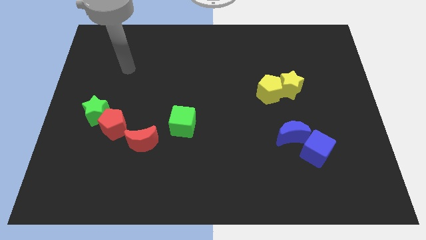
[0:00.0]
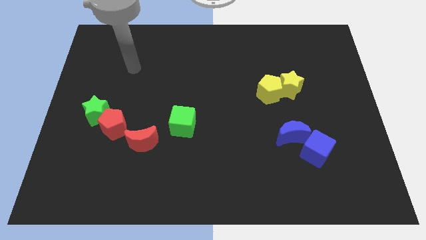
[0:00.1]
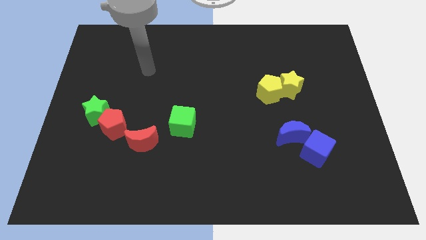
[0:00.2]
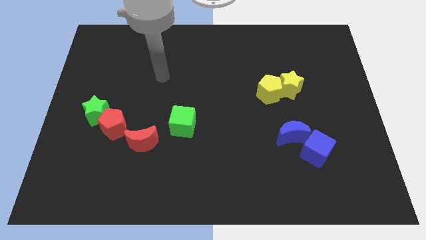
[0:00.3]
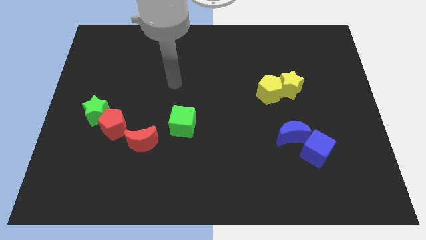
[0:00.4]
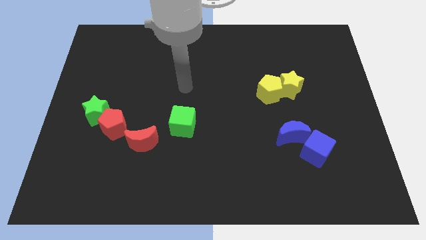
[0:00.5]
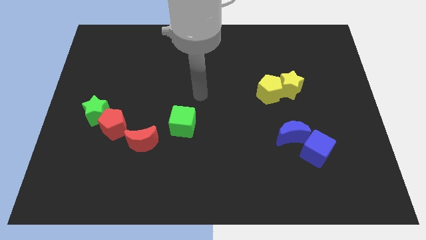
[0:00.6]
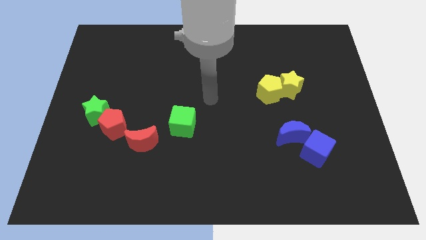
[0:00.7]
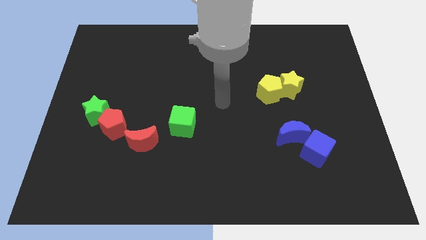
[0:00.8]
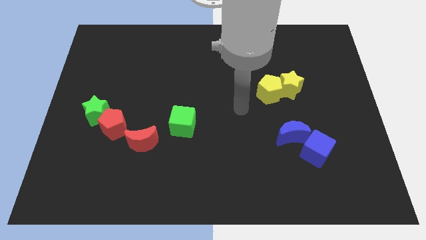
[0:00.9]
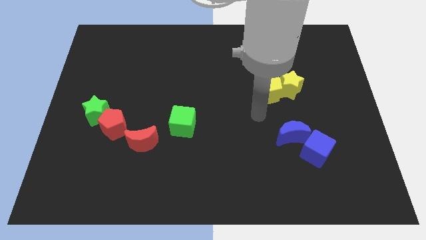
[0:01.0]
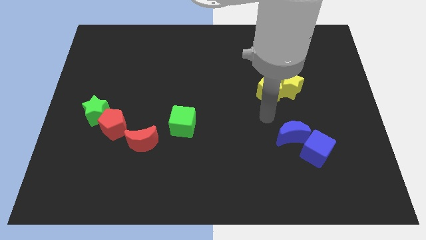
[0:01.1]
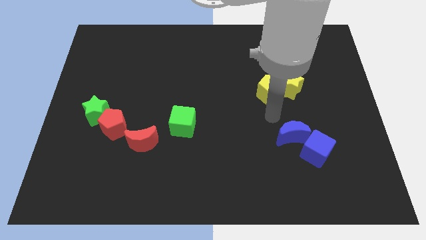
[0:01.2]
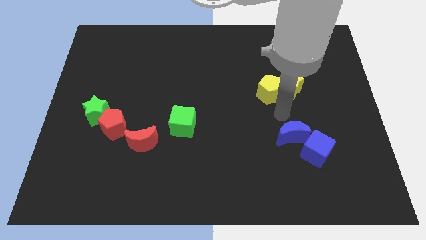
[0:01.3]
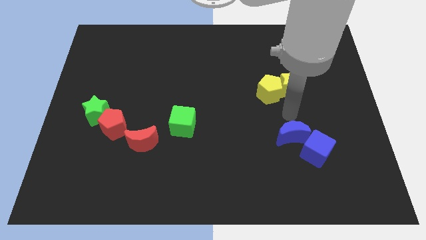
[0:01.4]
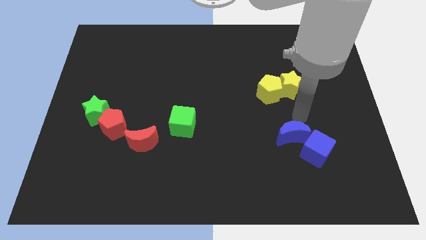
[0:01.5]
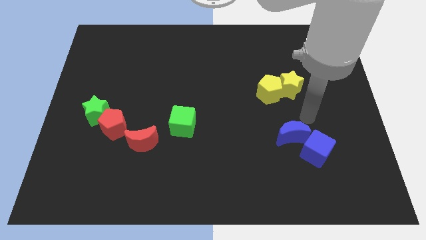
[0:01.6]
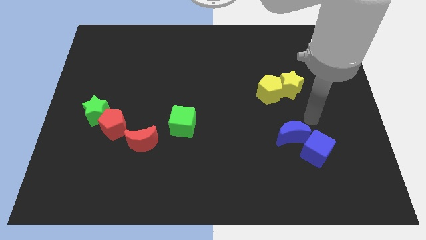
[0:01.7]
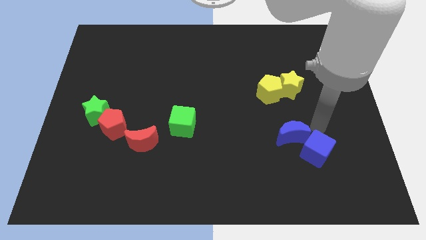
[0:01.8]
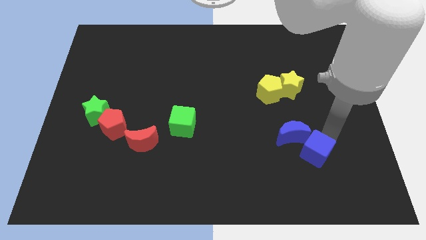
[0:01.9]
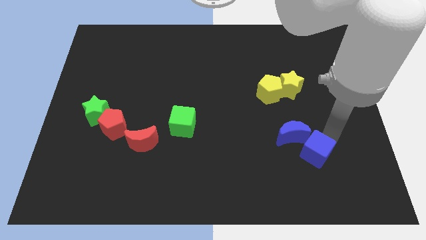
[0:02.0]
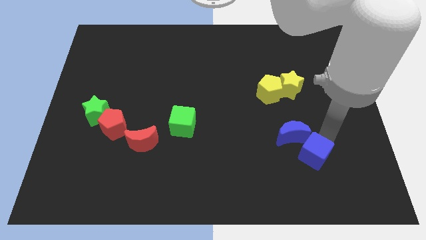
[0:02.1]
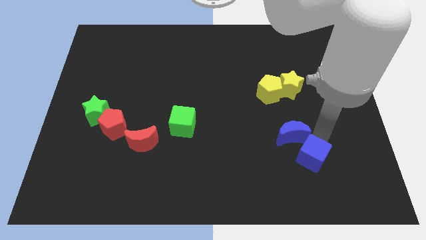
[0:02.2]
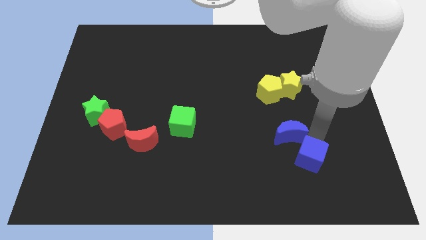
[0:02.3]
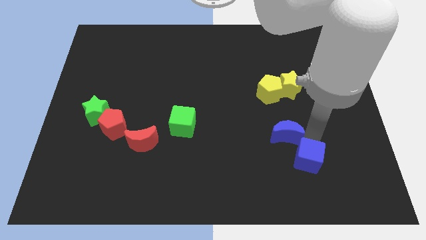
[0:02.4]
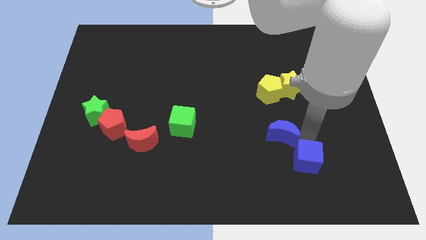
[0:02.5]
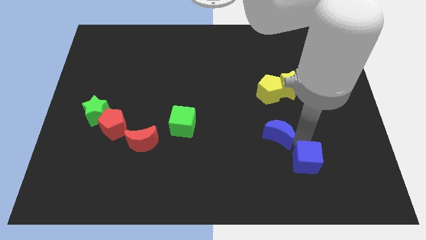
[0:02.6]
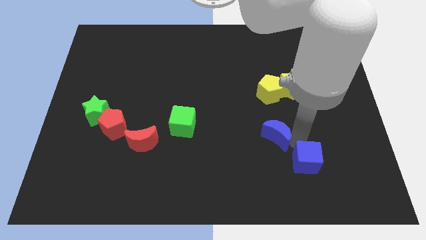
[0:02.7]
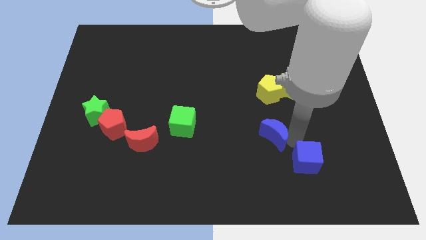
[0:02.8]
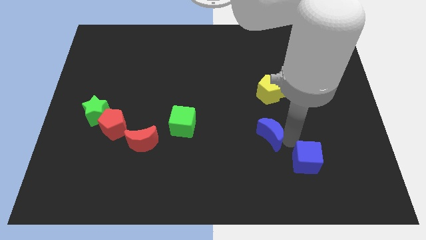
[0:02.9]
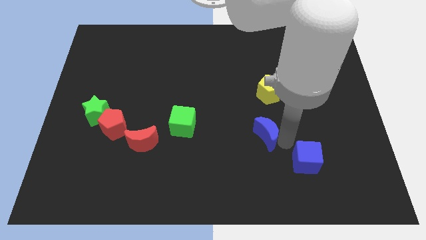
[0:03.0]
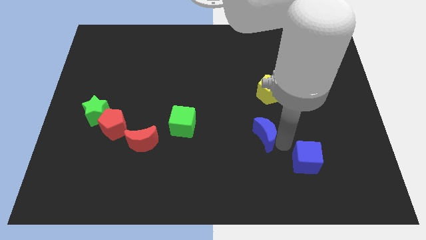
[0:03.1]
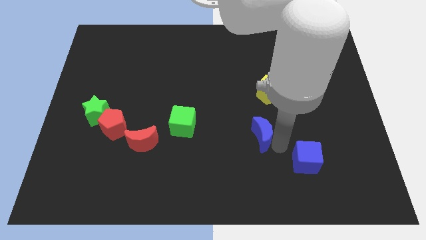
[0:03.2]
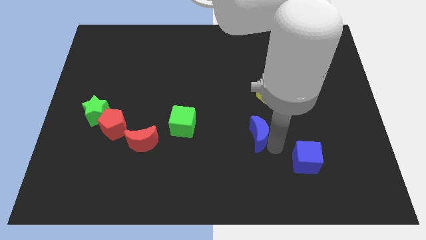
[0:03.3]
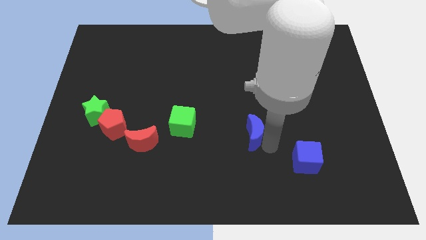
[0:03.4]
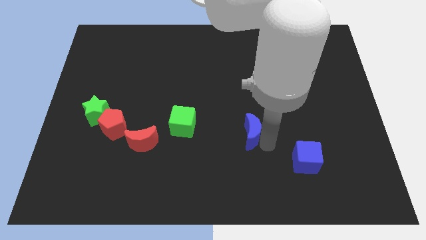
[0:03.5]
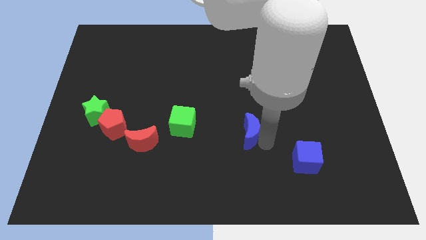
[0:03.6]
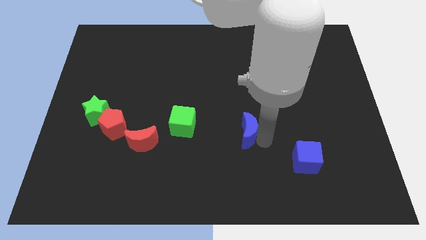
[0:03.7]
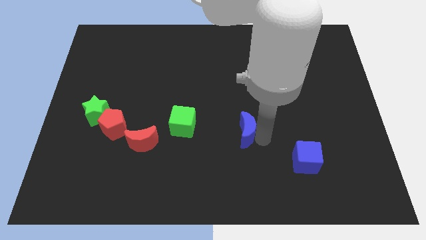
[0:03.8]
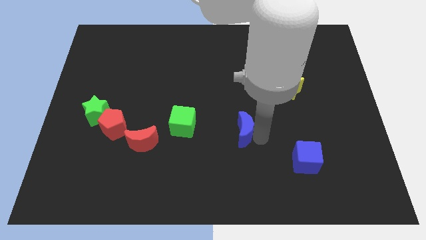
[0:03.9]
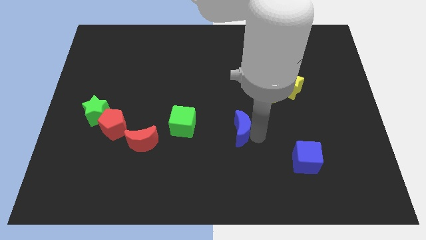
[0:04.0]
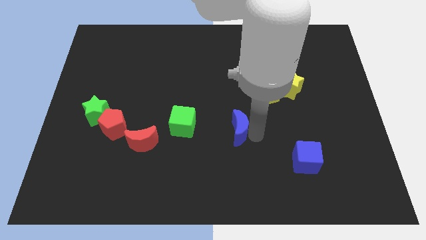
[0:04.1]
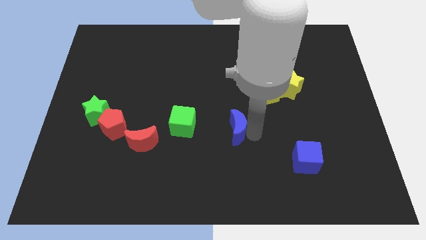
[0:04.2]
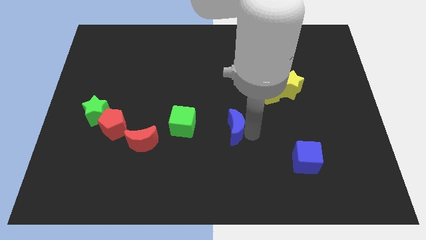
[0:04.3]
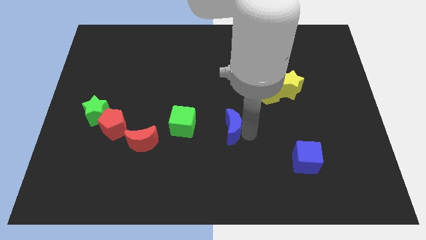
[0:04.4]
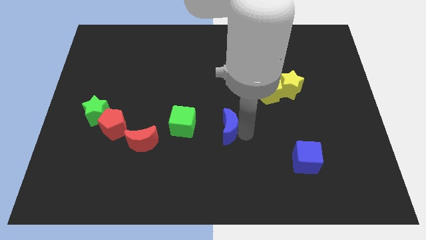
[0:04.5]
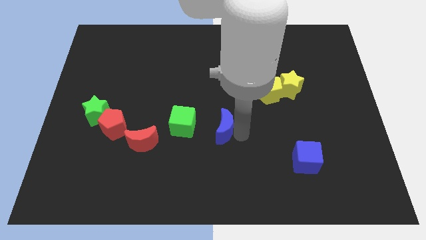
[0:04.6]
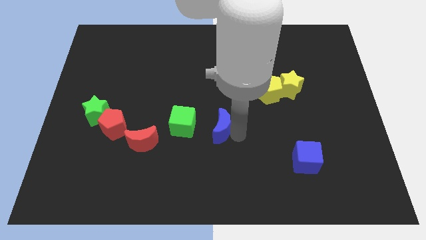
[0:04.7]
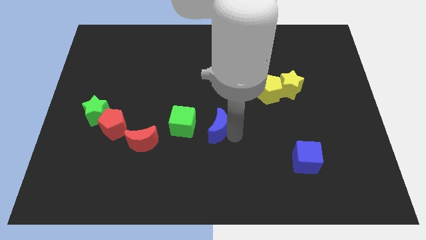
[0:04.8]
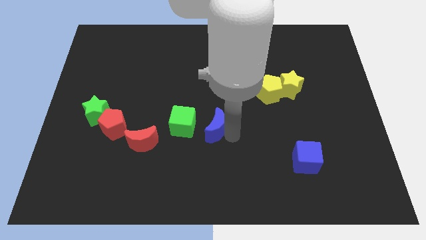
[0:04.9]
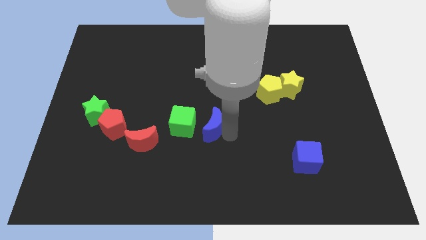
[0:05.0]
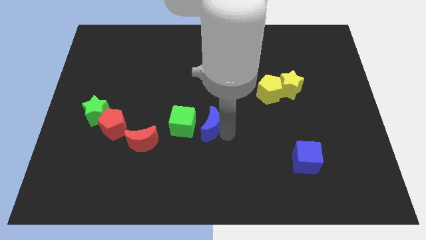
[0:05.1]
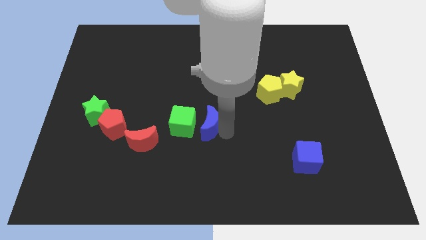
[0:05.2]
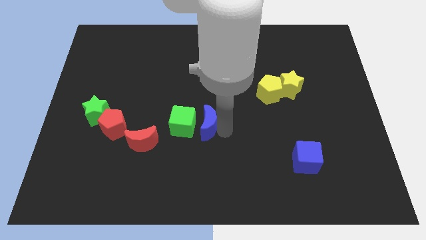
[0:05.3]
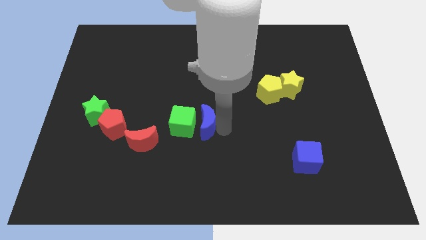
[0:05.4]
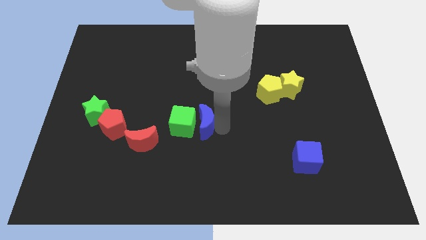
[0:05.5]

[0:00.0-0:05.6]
put the blue moon next to the green cube

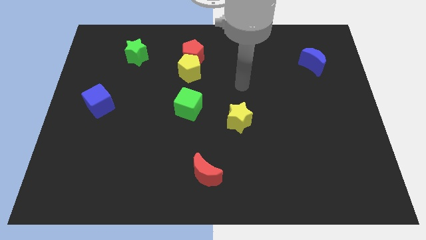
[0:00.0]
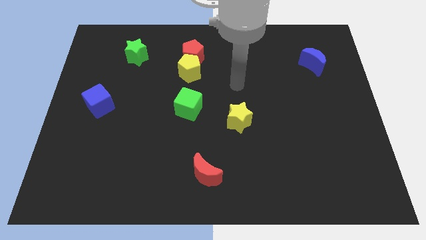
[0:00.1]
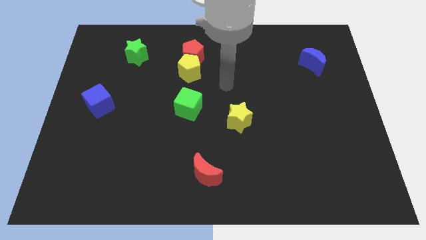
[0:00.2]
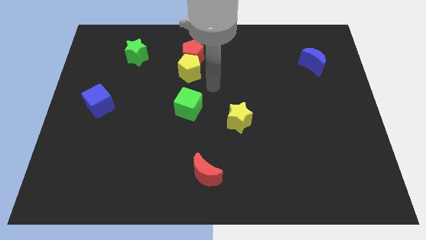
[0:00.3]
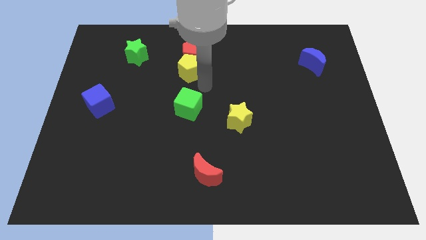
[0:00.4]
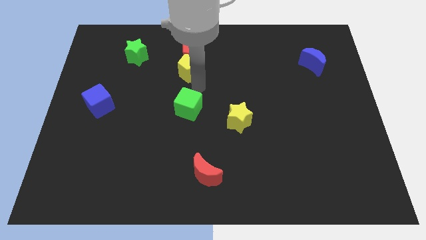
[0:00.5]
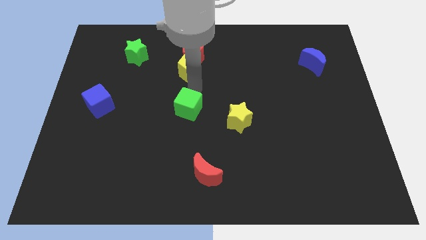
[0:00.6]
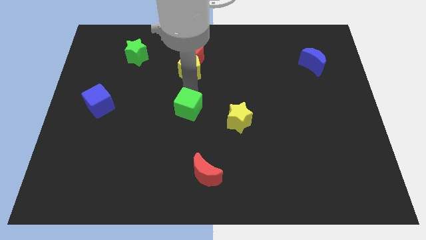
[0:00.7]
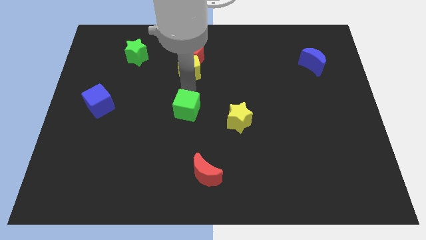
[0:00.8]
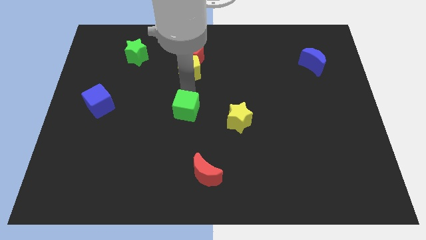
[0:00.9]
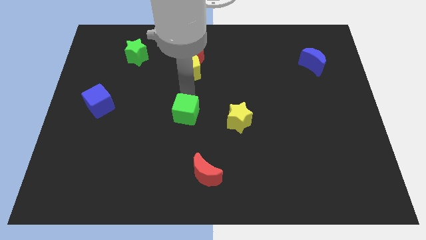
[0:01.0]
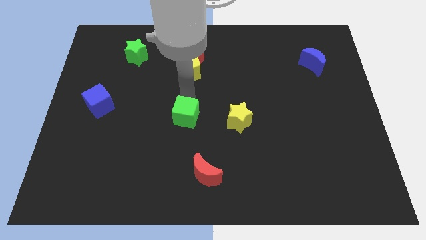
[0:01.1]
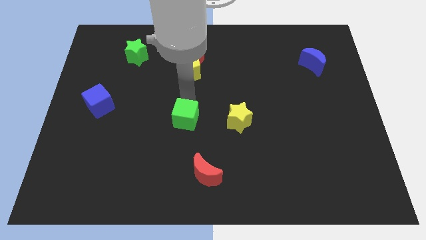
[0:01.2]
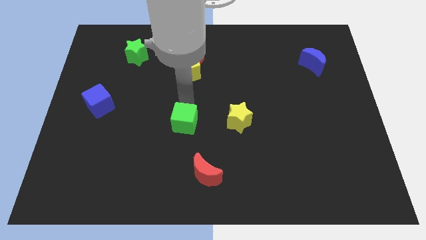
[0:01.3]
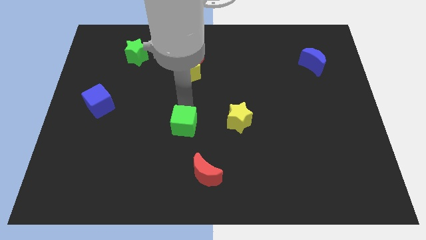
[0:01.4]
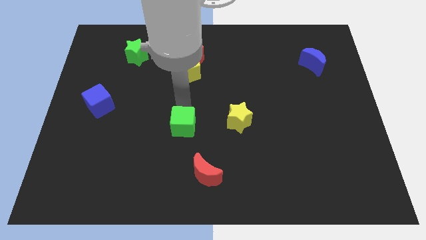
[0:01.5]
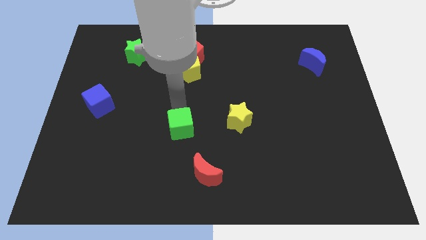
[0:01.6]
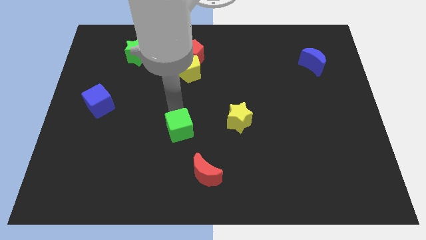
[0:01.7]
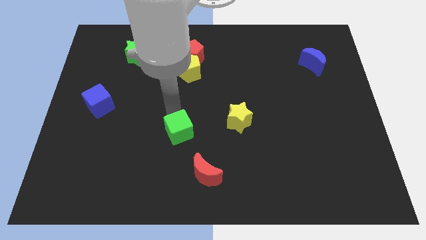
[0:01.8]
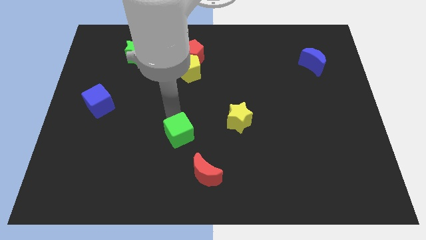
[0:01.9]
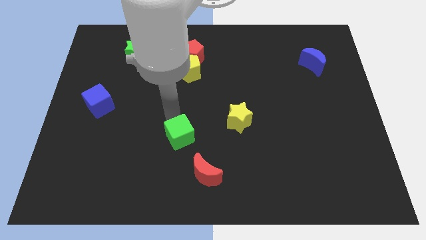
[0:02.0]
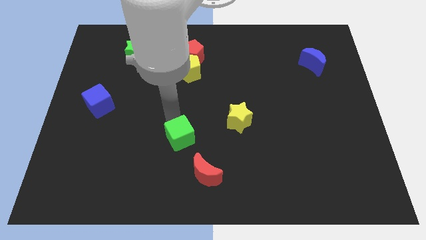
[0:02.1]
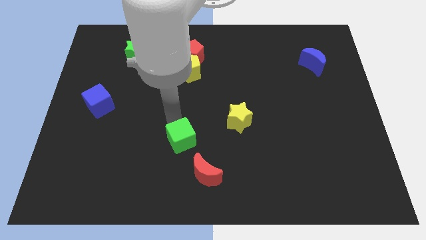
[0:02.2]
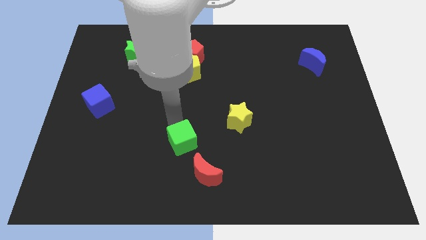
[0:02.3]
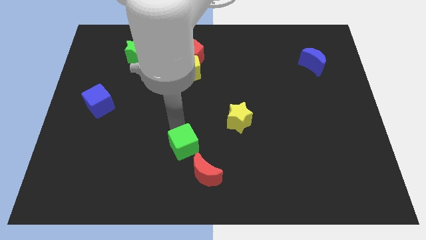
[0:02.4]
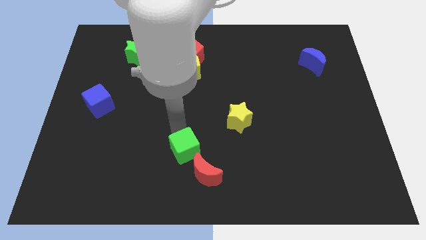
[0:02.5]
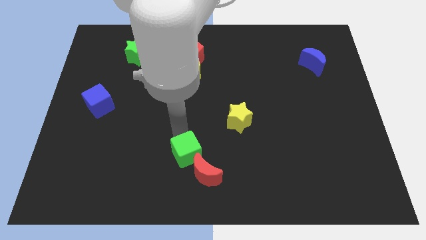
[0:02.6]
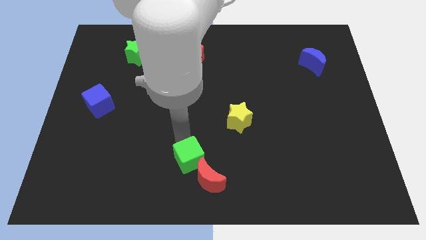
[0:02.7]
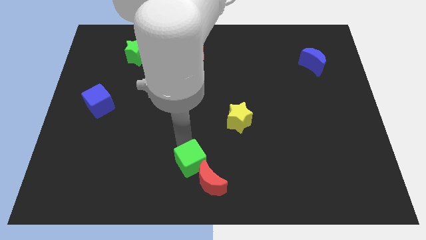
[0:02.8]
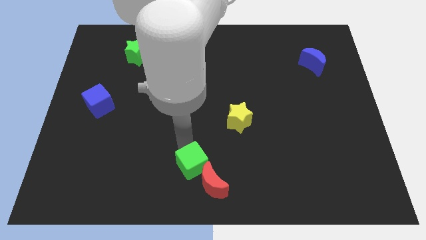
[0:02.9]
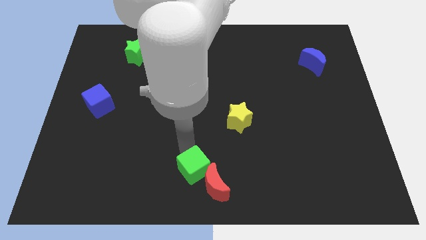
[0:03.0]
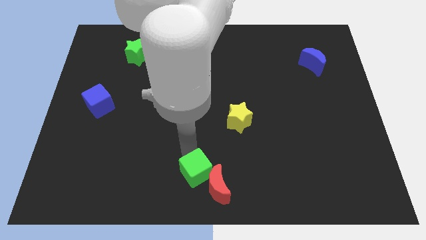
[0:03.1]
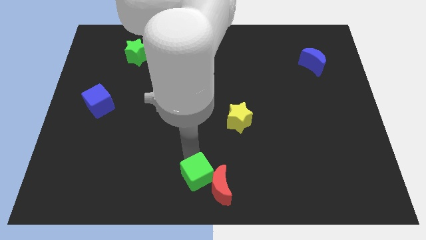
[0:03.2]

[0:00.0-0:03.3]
move the green cube close to the red moon
